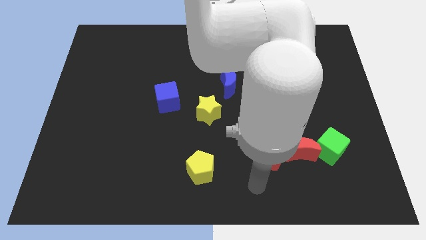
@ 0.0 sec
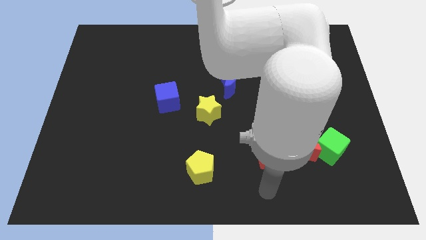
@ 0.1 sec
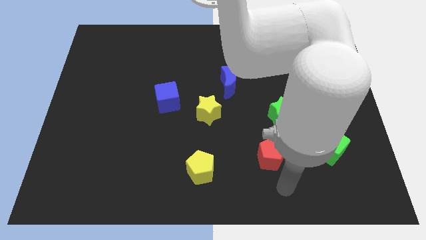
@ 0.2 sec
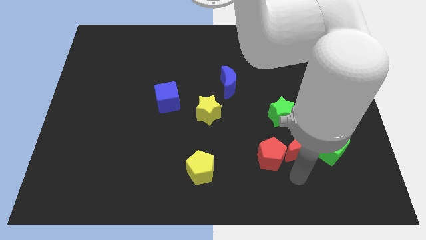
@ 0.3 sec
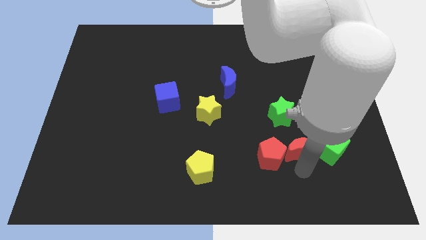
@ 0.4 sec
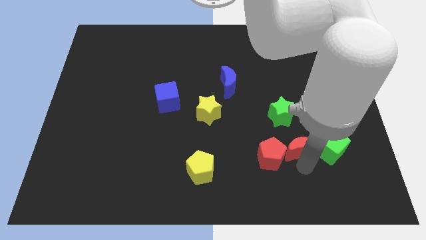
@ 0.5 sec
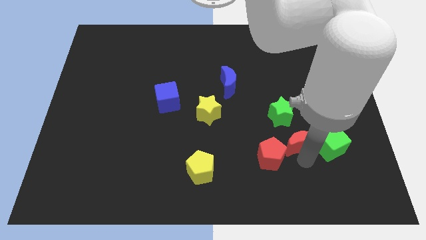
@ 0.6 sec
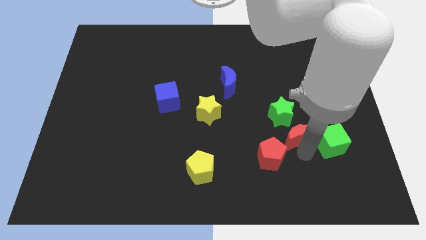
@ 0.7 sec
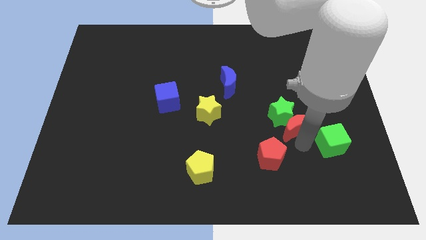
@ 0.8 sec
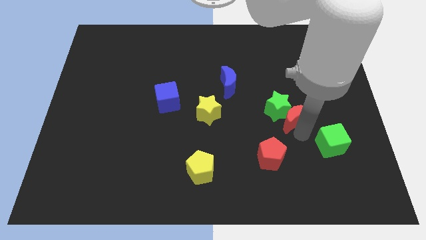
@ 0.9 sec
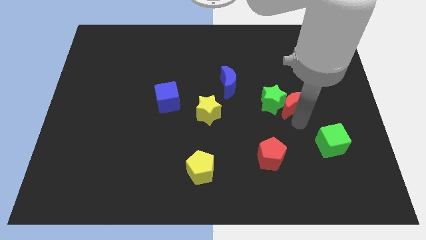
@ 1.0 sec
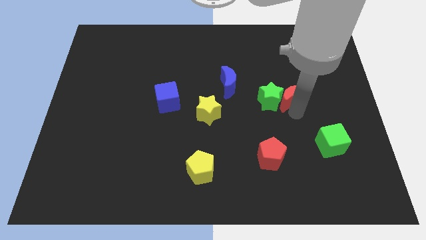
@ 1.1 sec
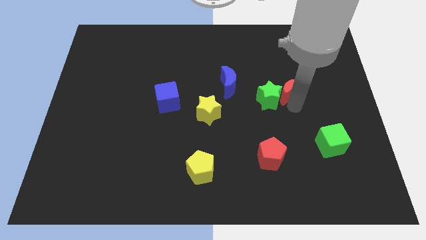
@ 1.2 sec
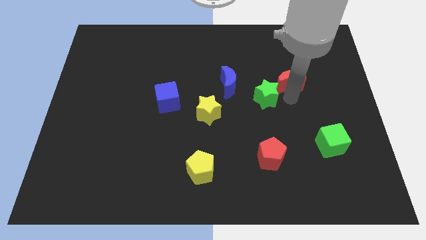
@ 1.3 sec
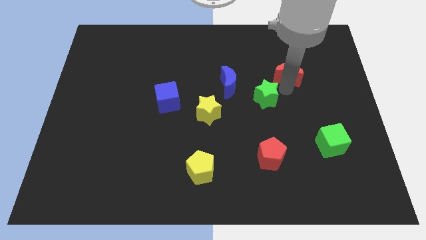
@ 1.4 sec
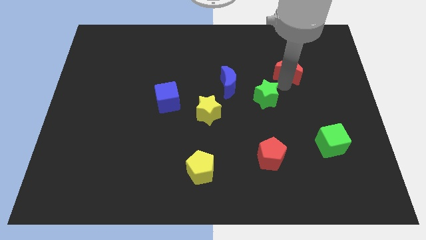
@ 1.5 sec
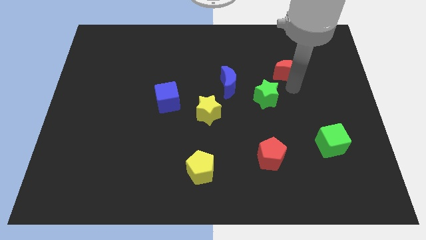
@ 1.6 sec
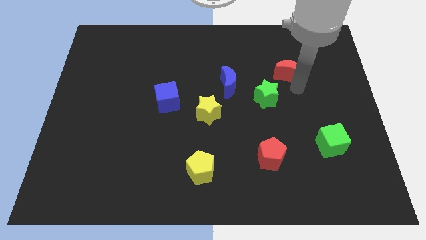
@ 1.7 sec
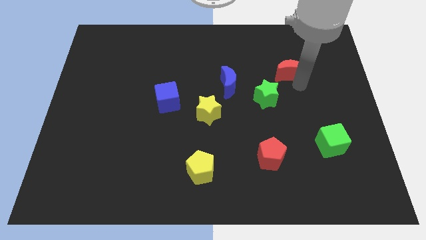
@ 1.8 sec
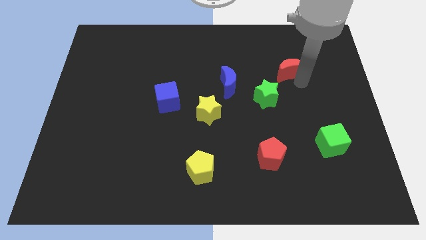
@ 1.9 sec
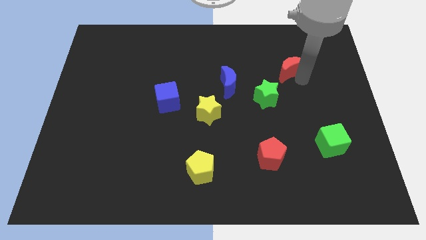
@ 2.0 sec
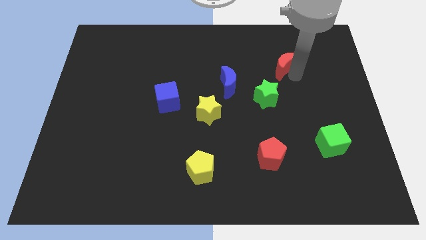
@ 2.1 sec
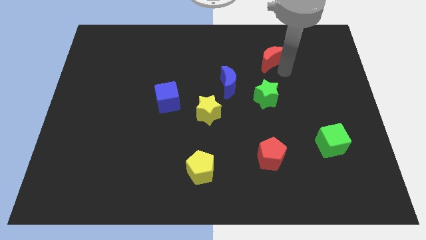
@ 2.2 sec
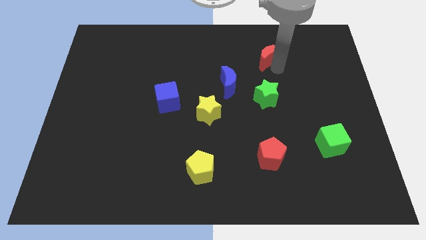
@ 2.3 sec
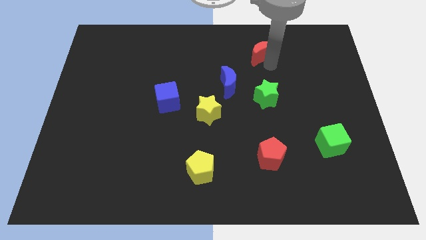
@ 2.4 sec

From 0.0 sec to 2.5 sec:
move the red crescent to the top of the green star

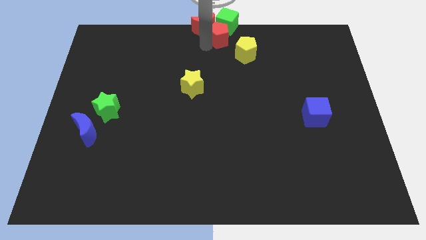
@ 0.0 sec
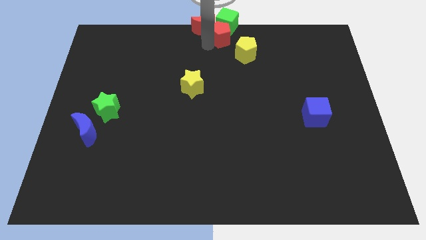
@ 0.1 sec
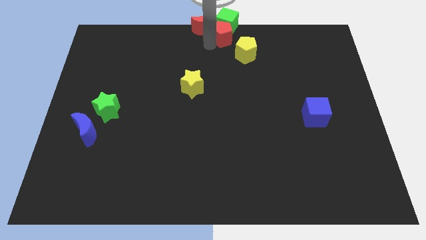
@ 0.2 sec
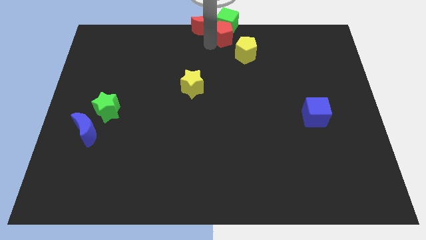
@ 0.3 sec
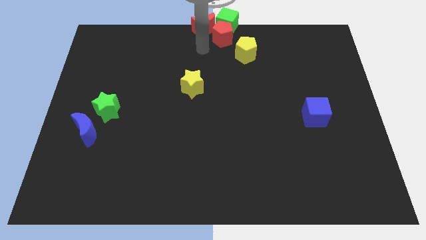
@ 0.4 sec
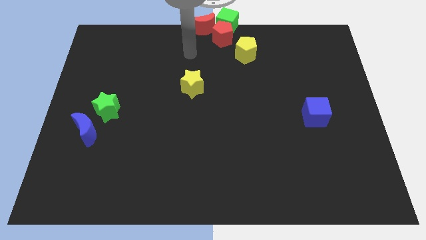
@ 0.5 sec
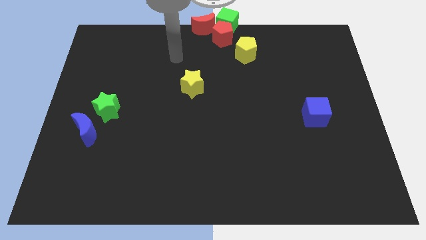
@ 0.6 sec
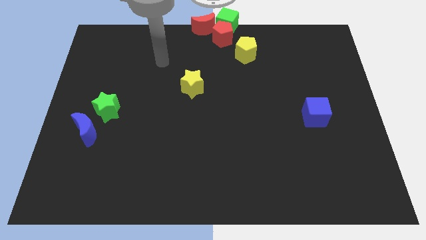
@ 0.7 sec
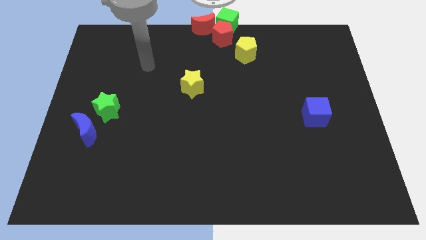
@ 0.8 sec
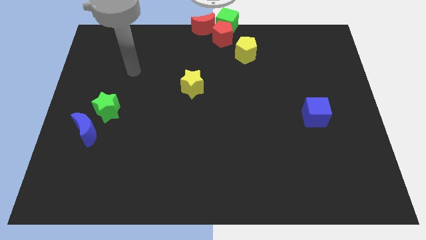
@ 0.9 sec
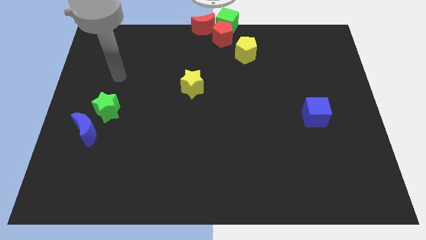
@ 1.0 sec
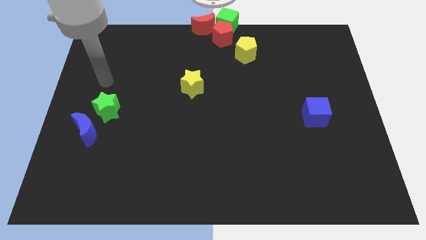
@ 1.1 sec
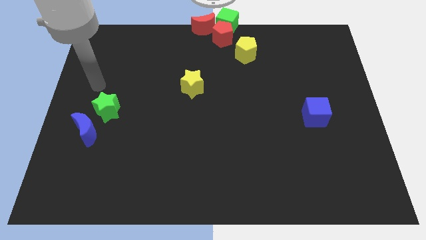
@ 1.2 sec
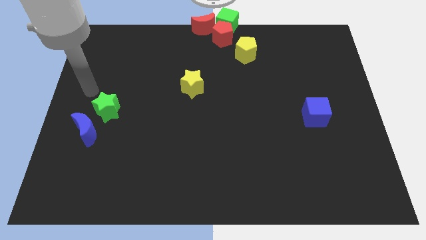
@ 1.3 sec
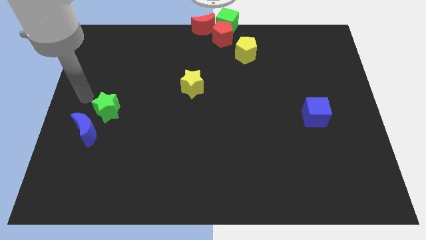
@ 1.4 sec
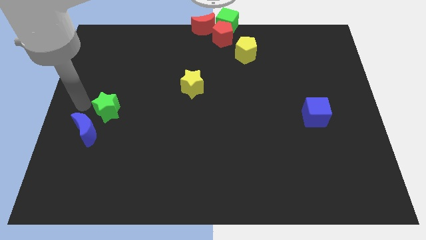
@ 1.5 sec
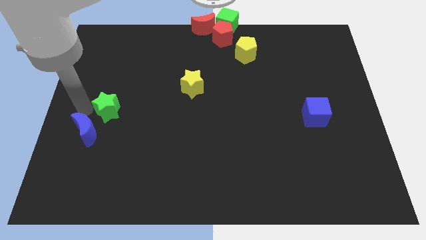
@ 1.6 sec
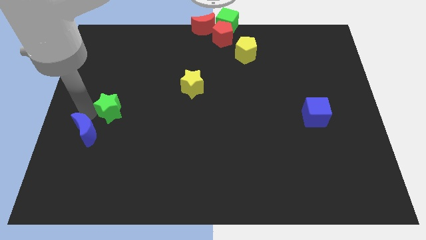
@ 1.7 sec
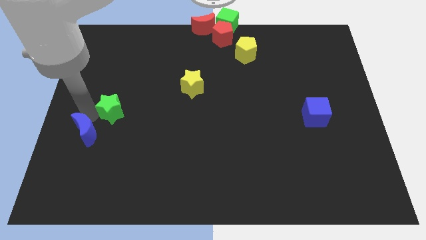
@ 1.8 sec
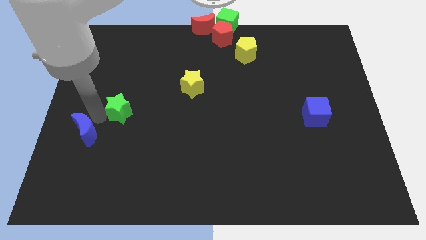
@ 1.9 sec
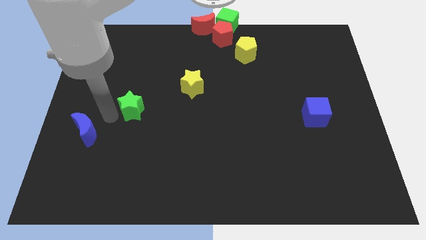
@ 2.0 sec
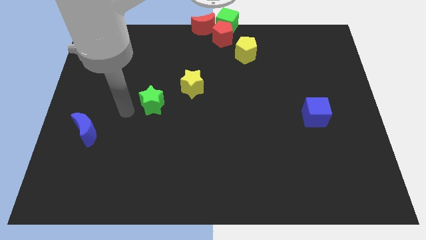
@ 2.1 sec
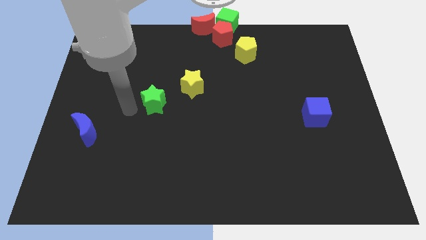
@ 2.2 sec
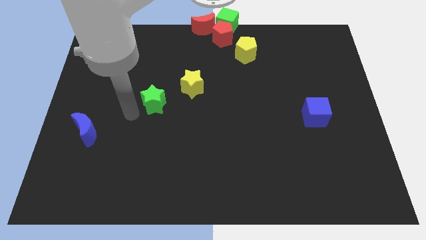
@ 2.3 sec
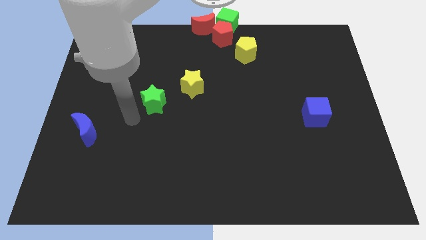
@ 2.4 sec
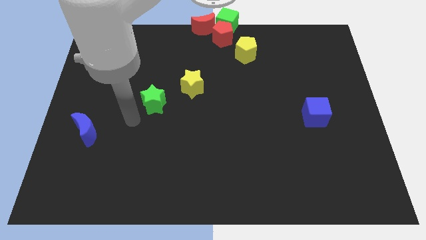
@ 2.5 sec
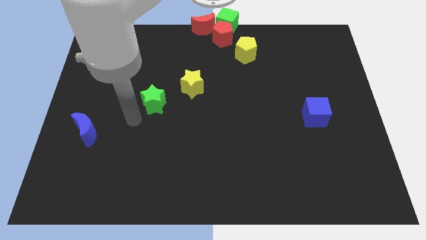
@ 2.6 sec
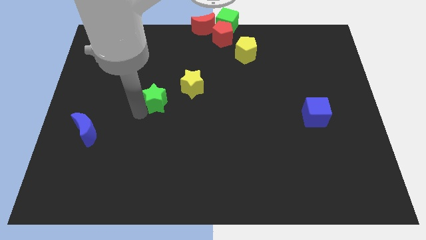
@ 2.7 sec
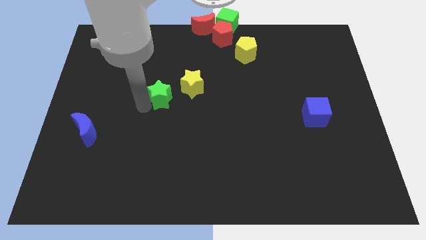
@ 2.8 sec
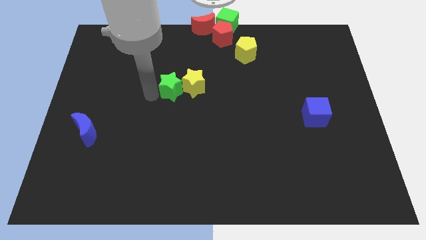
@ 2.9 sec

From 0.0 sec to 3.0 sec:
separate the green star from the blue crescent

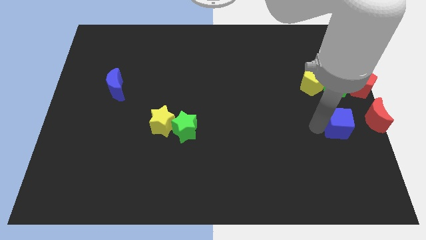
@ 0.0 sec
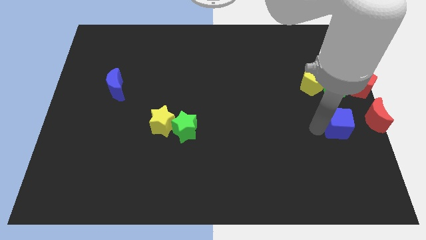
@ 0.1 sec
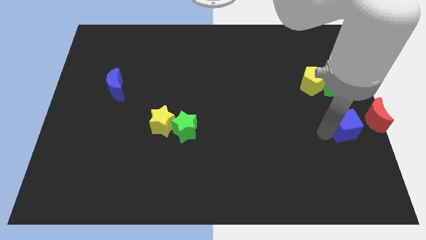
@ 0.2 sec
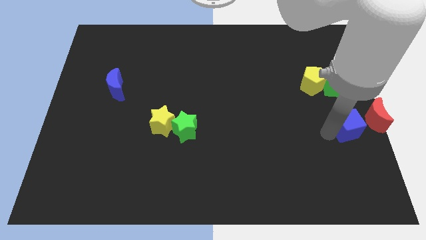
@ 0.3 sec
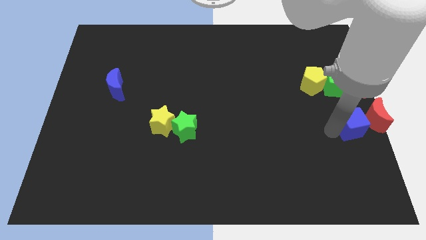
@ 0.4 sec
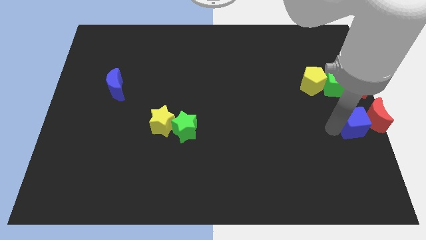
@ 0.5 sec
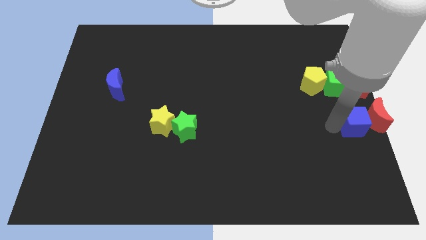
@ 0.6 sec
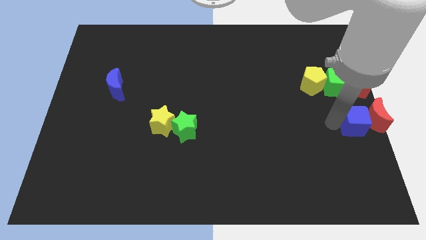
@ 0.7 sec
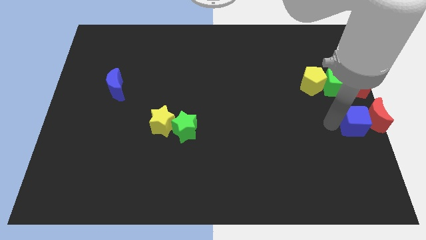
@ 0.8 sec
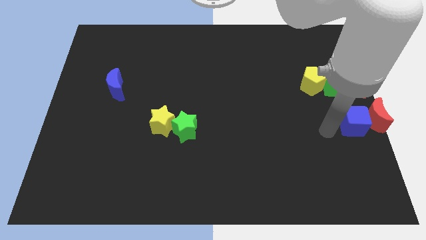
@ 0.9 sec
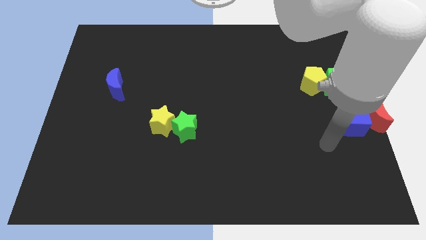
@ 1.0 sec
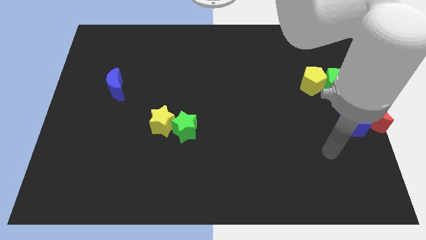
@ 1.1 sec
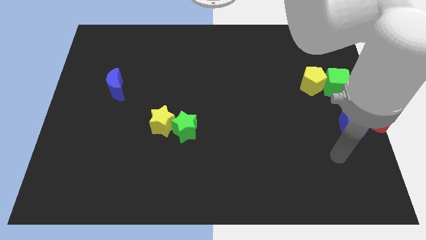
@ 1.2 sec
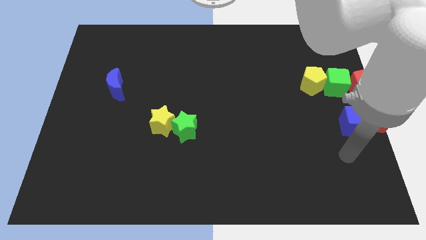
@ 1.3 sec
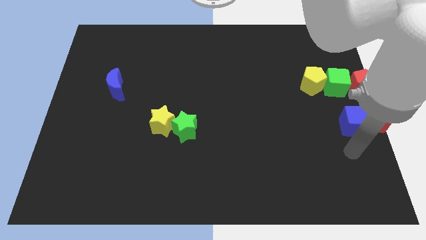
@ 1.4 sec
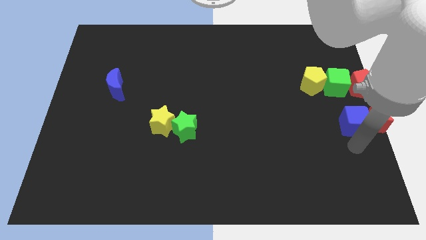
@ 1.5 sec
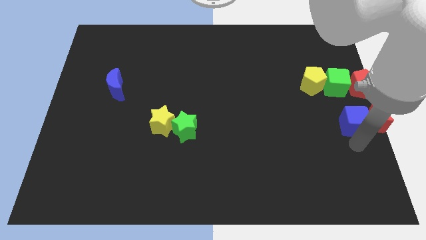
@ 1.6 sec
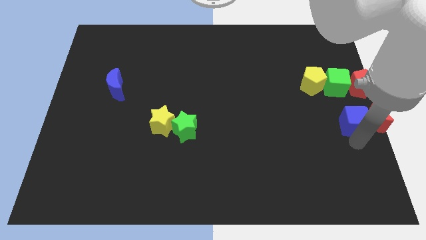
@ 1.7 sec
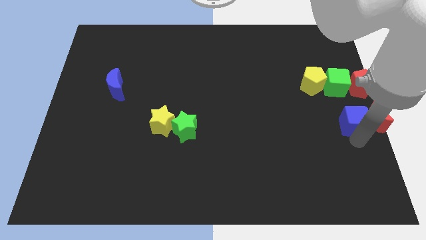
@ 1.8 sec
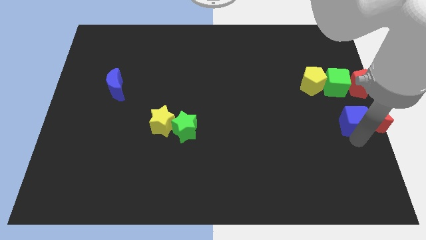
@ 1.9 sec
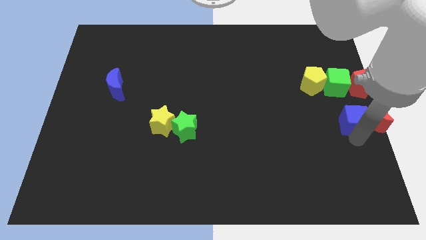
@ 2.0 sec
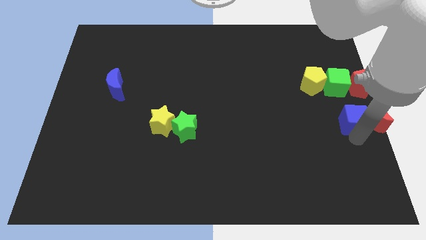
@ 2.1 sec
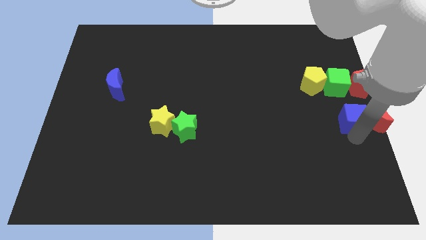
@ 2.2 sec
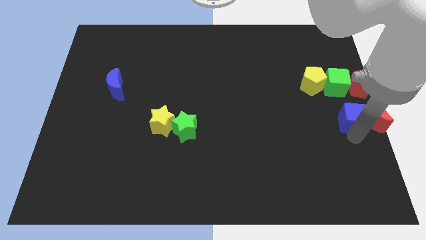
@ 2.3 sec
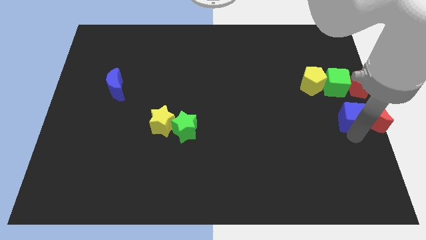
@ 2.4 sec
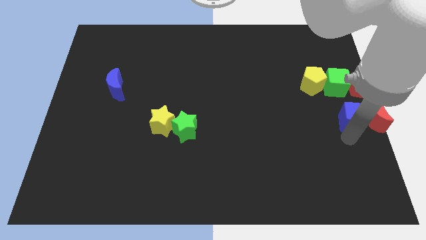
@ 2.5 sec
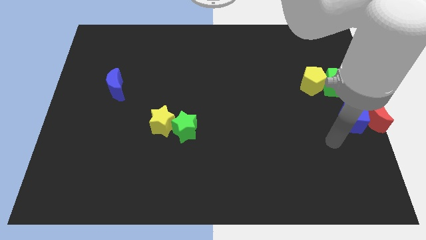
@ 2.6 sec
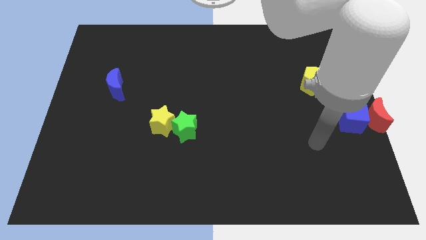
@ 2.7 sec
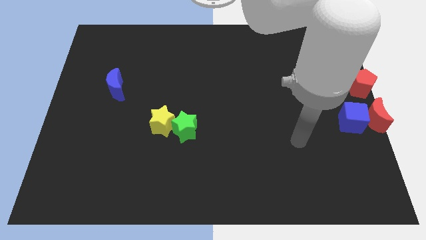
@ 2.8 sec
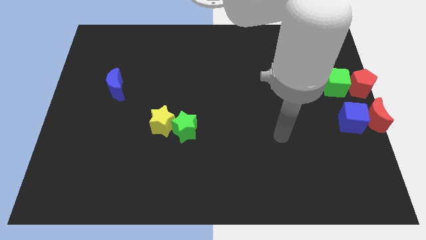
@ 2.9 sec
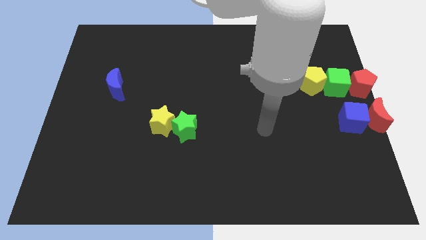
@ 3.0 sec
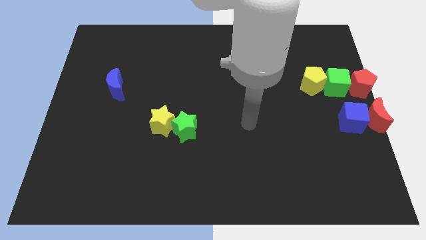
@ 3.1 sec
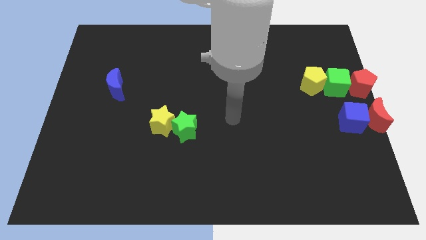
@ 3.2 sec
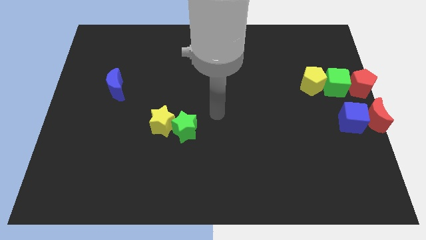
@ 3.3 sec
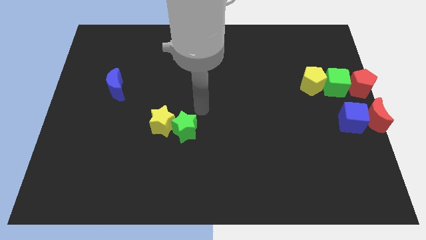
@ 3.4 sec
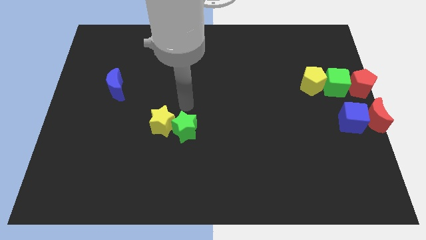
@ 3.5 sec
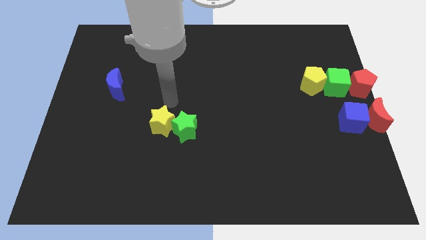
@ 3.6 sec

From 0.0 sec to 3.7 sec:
slightly push the blue cube to the red crescent
